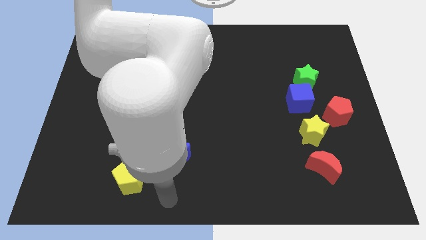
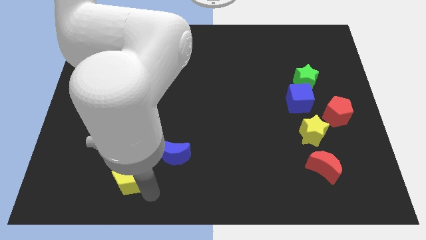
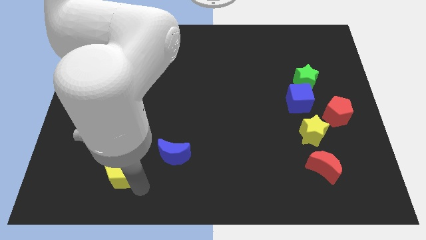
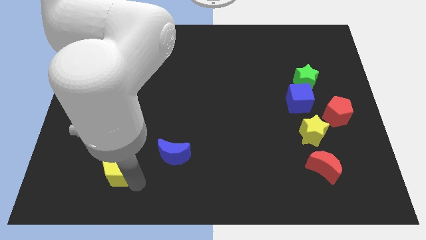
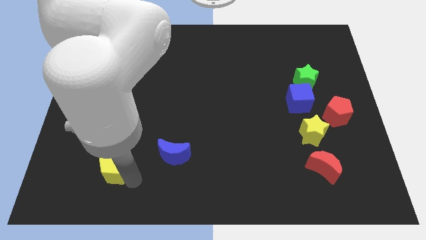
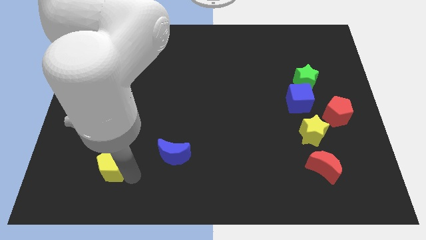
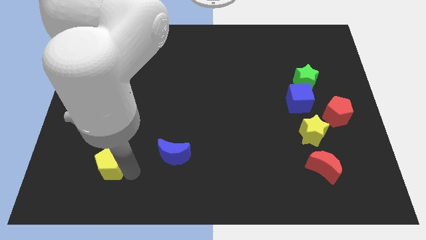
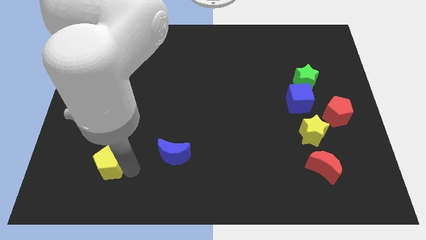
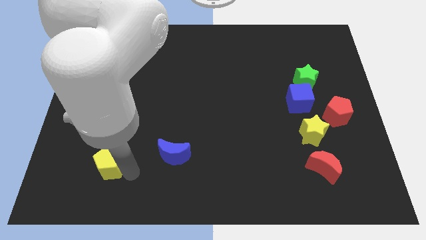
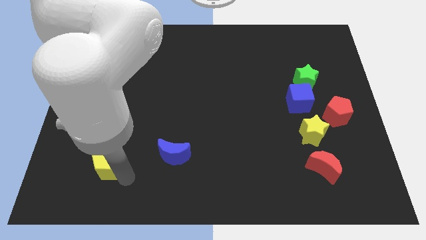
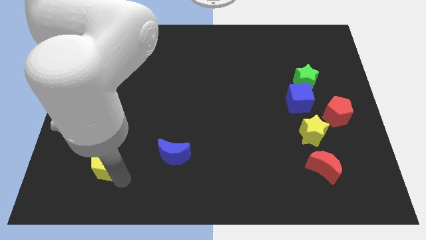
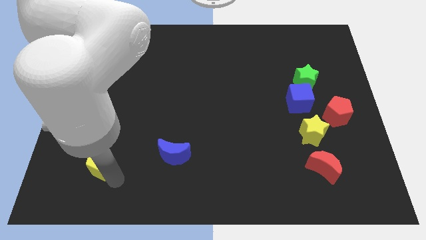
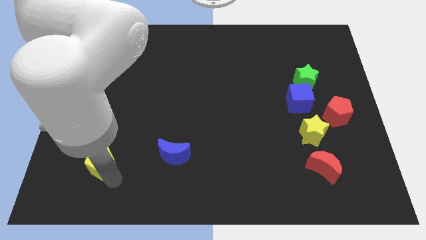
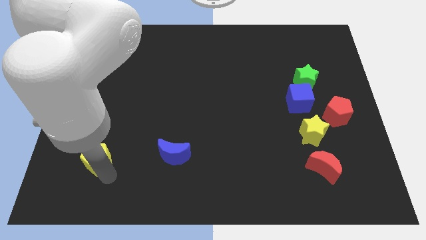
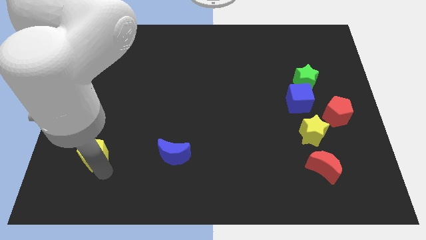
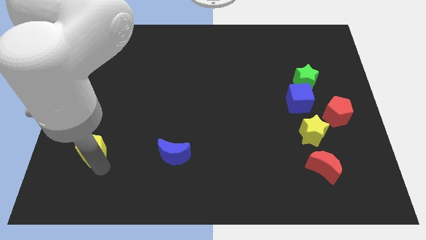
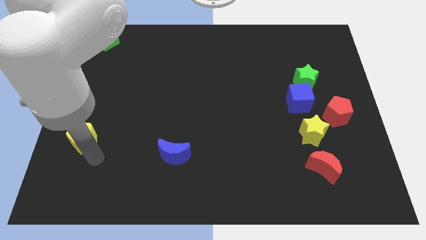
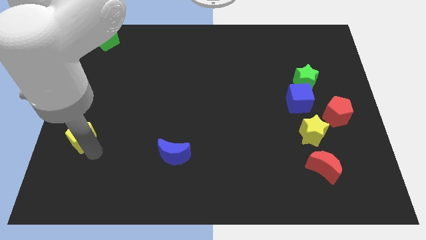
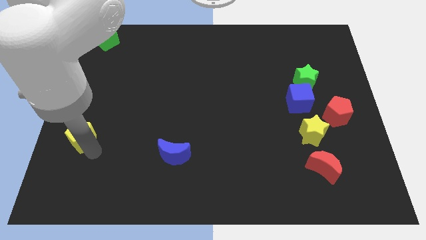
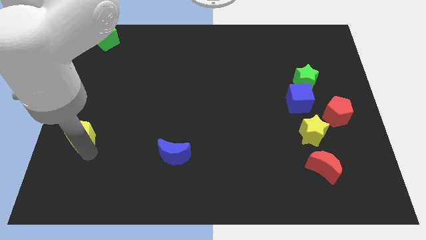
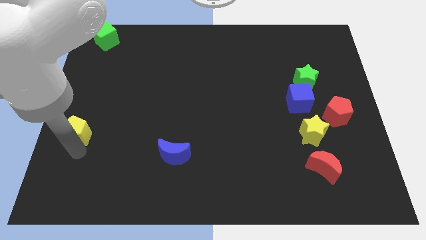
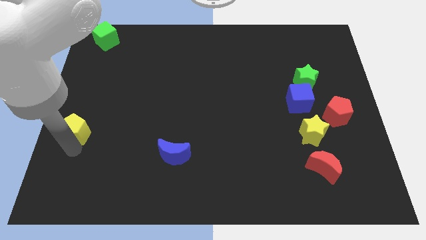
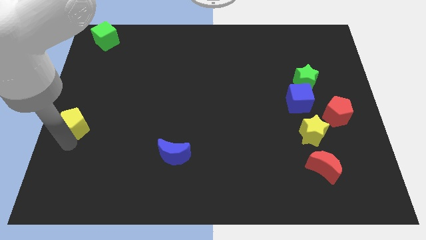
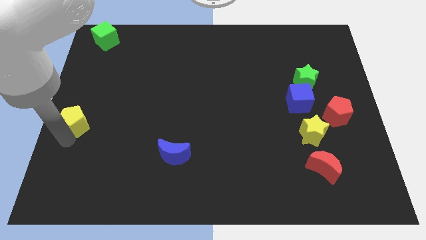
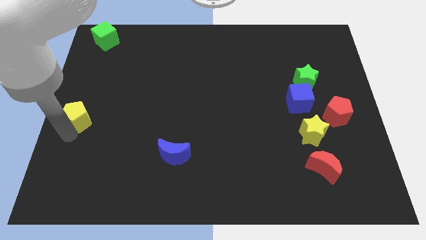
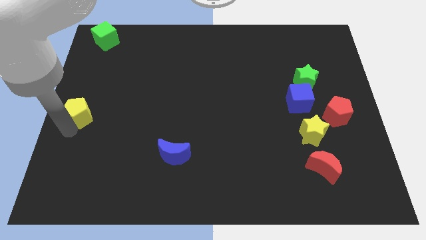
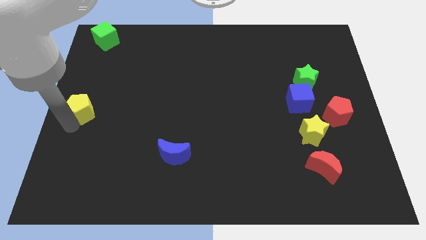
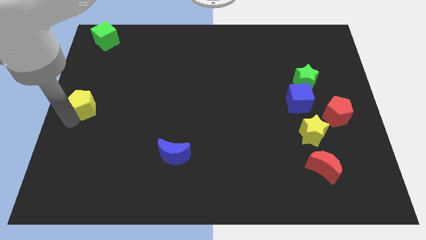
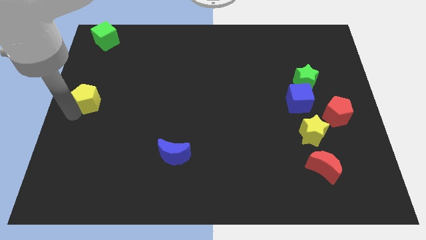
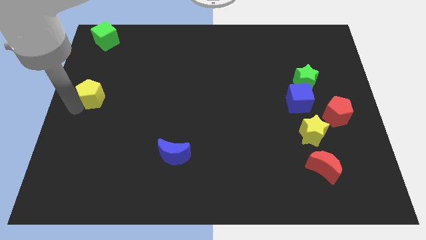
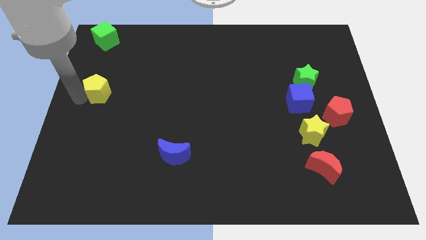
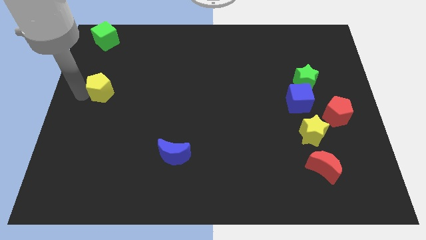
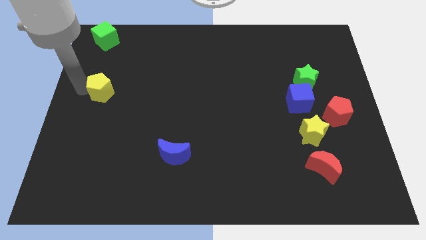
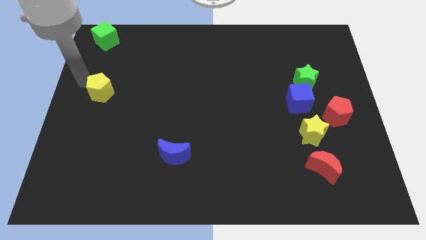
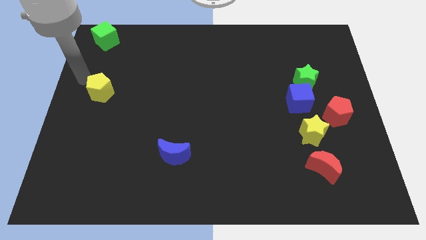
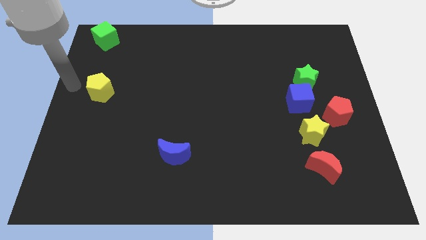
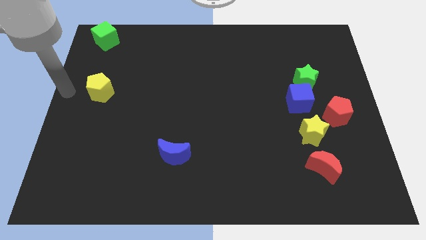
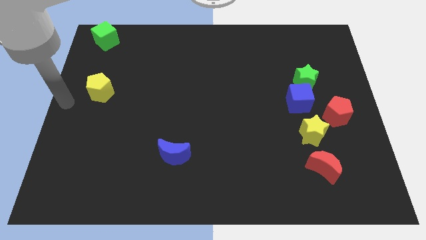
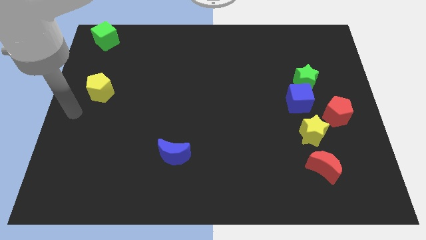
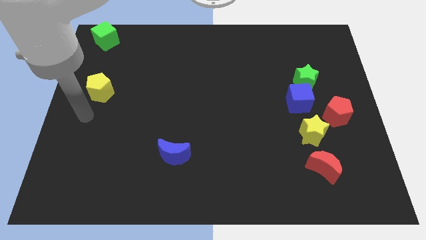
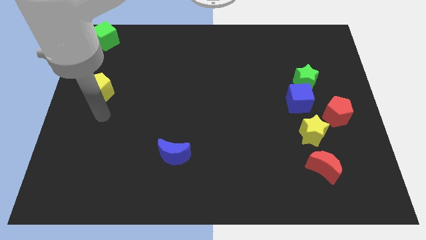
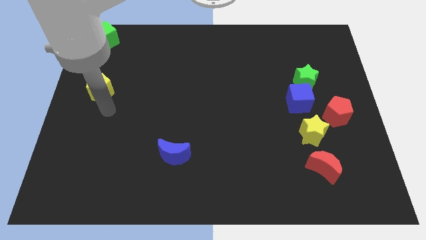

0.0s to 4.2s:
move the yellow pentagon to the left of the blue cube

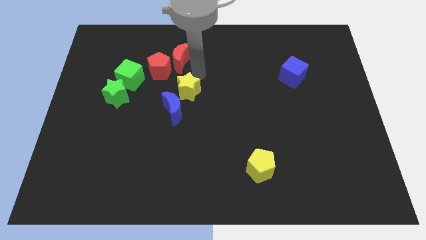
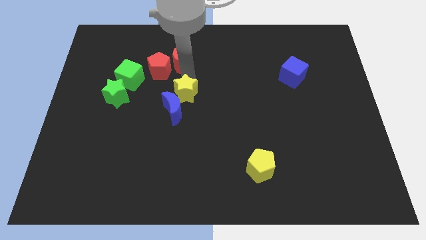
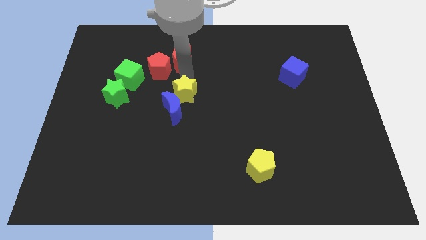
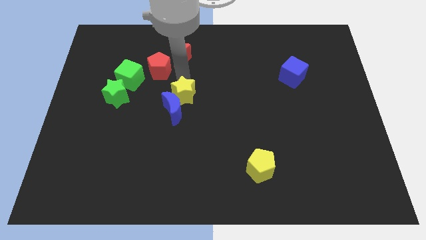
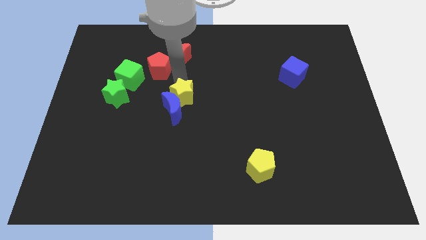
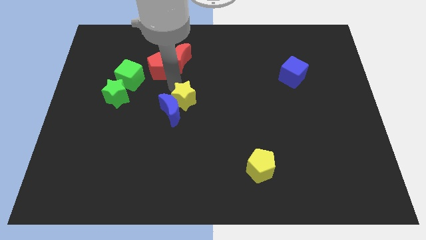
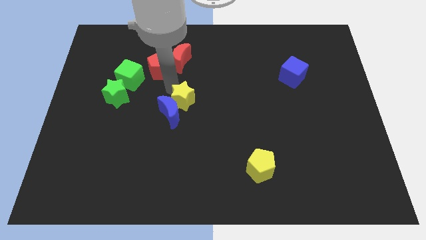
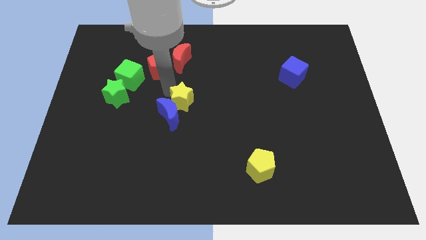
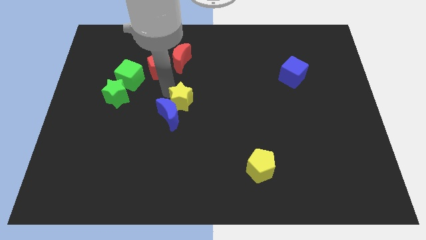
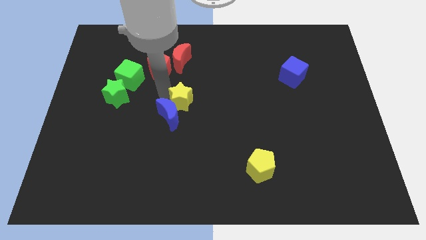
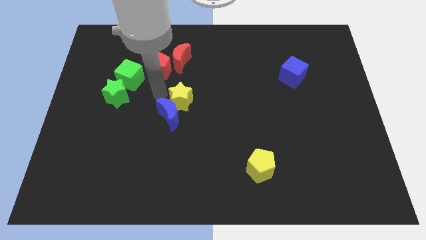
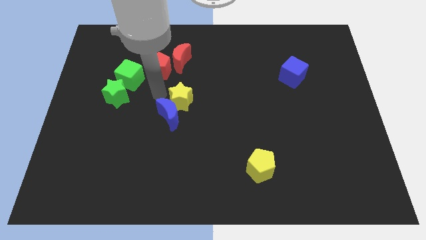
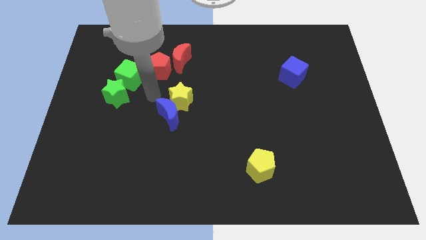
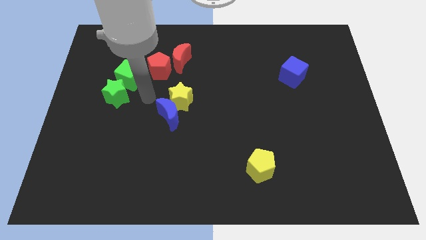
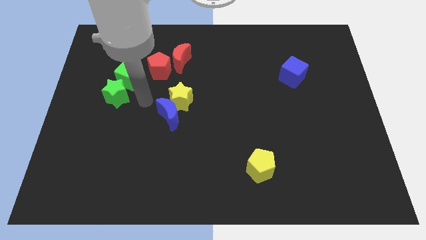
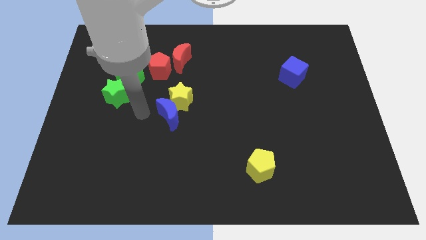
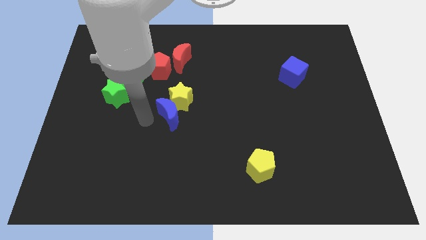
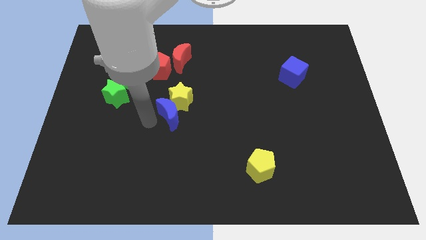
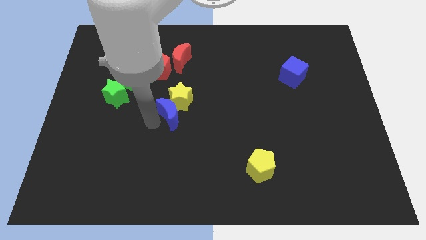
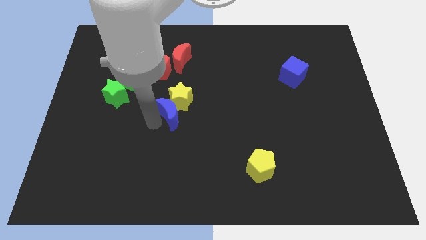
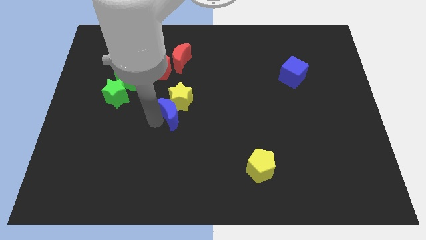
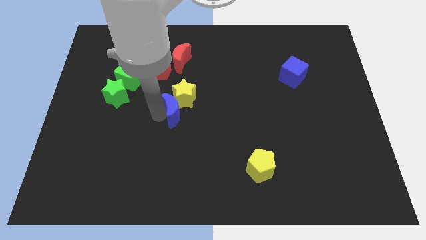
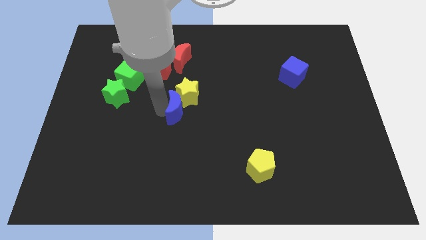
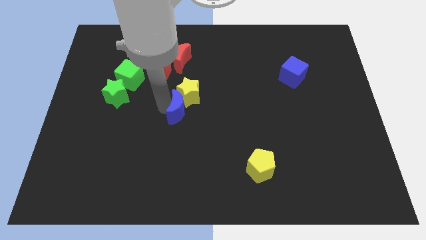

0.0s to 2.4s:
slightly push the blue moon upwards

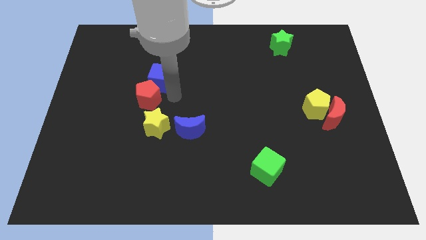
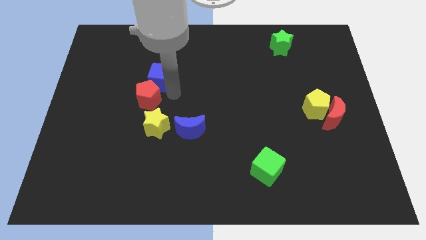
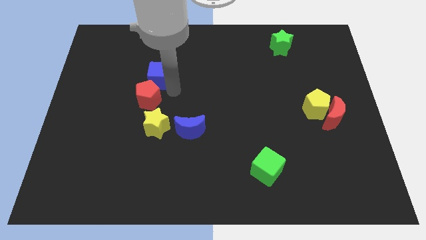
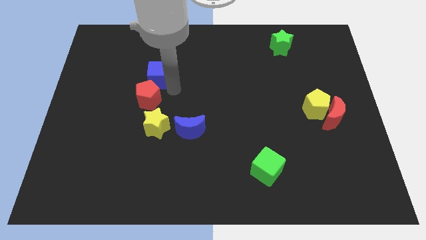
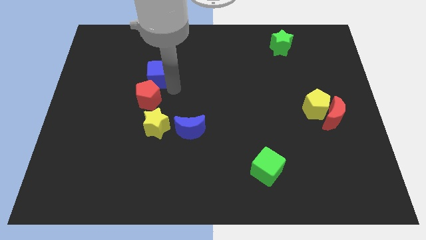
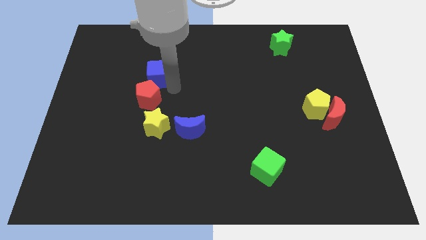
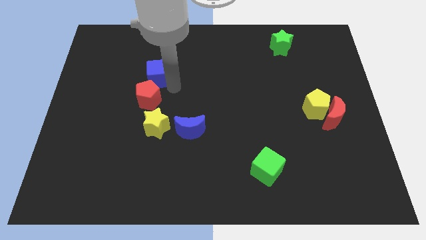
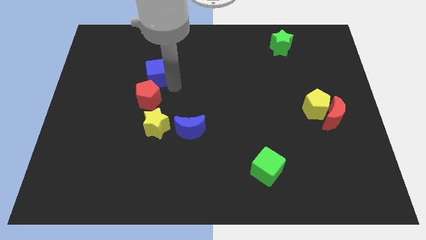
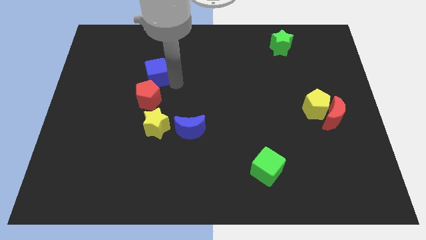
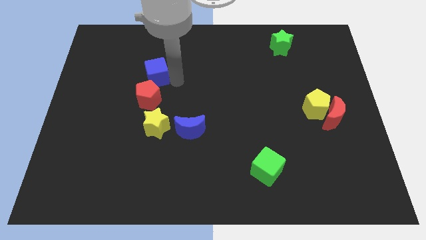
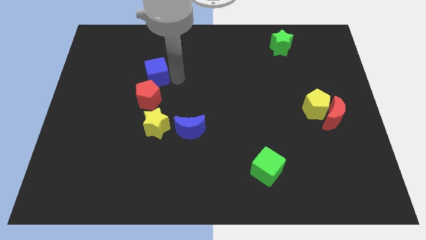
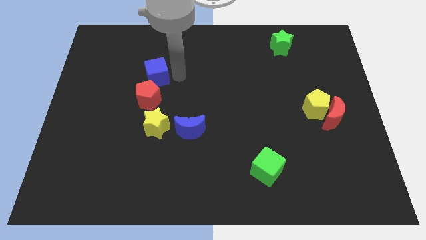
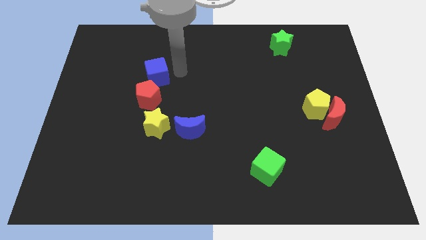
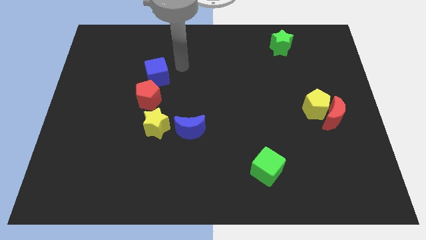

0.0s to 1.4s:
slide the blue cube on the top side of the red pentagon

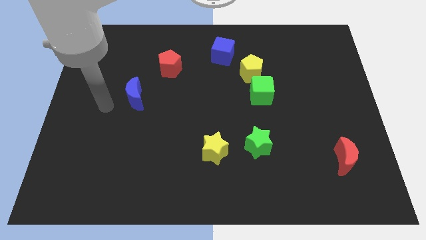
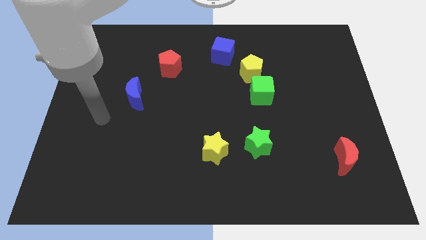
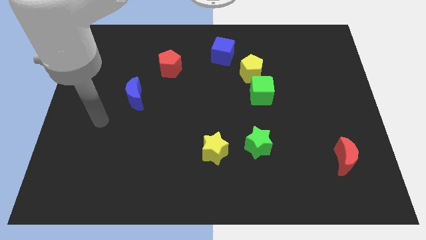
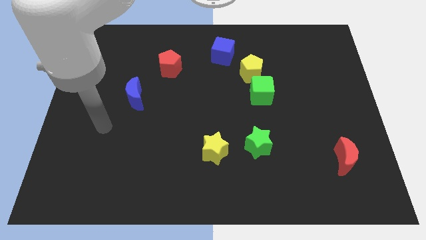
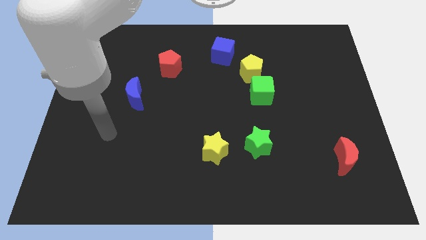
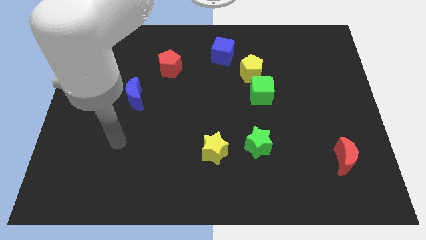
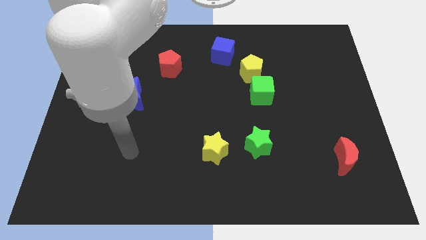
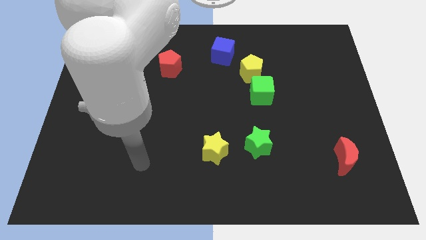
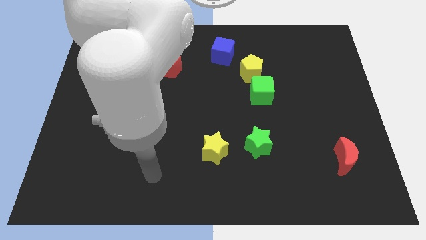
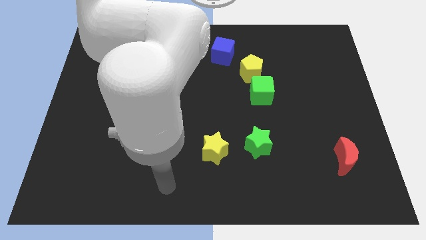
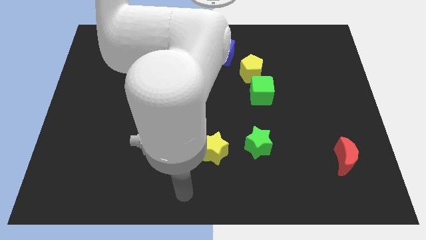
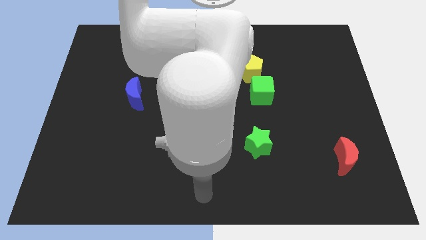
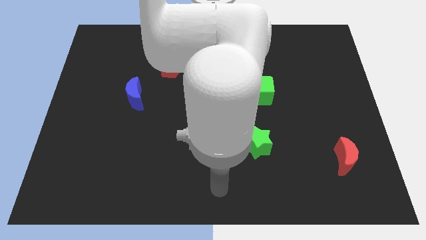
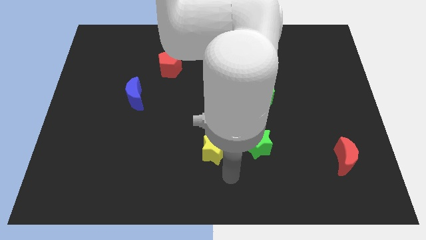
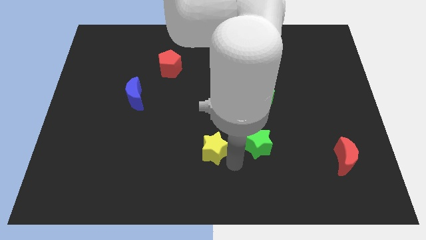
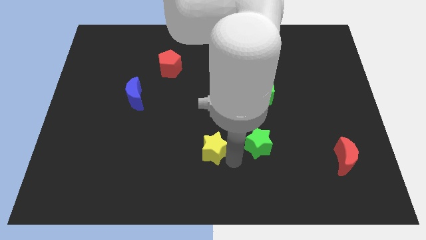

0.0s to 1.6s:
move the arm diagonally to the yellow star
